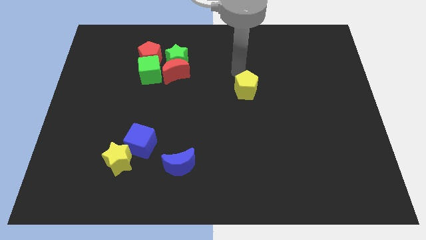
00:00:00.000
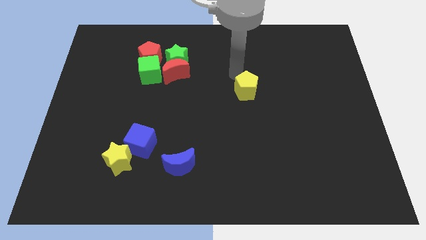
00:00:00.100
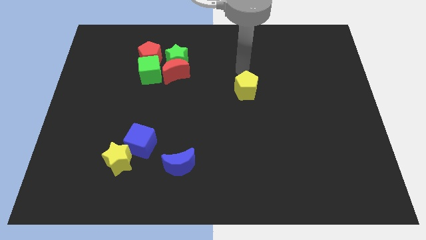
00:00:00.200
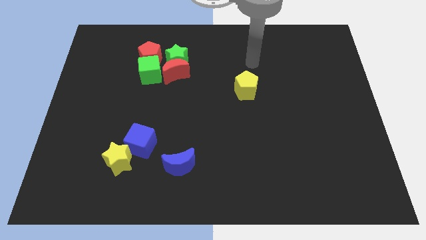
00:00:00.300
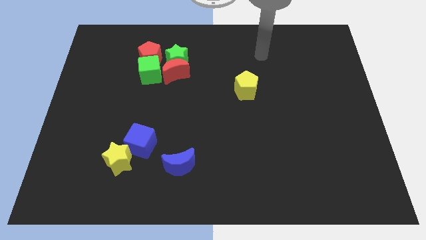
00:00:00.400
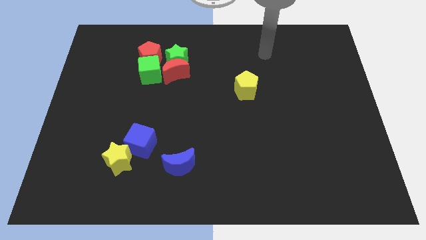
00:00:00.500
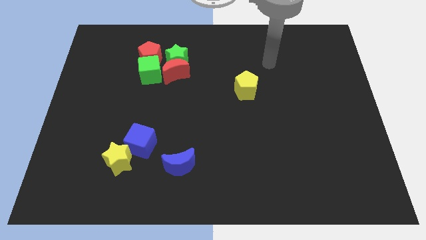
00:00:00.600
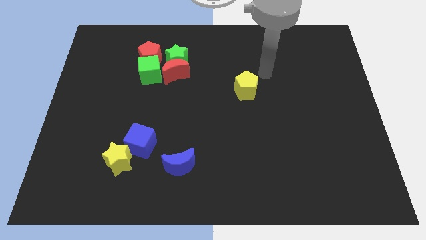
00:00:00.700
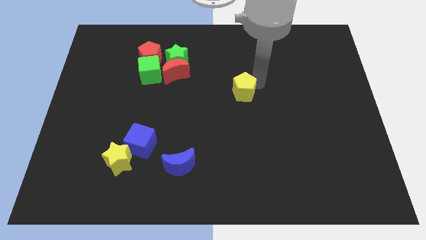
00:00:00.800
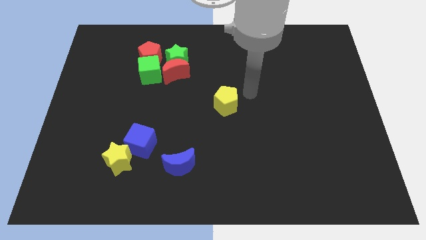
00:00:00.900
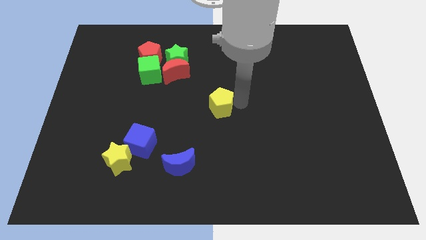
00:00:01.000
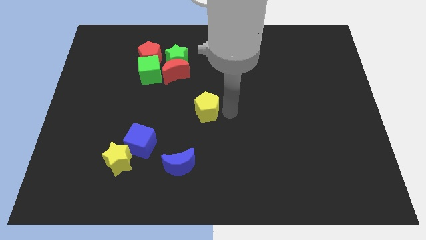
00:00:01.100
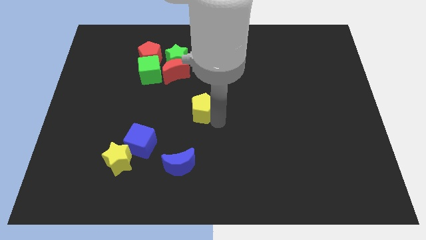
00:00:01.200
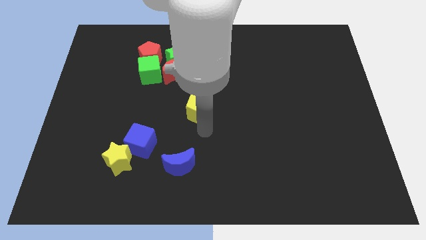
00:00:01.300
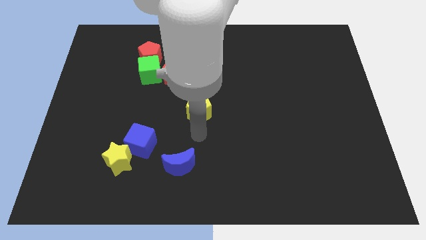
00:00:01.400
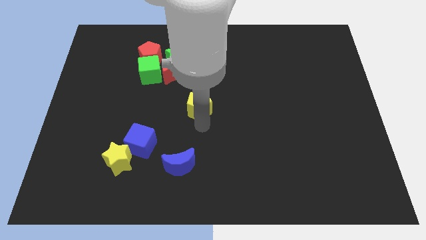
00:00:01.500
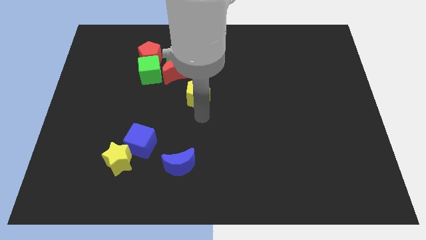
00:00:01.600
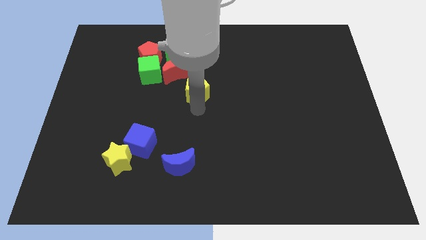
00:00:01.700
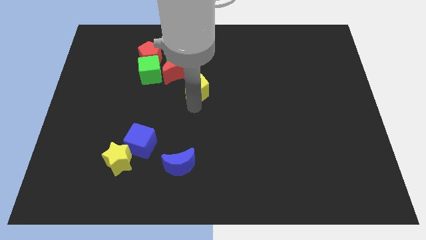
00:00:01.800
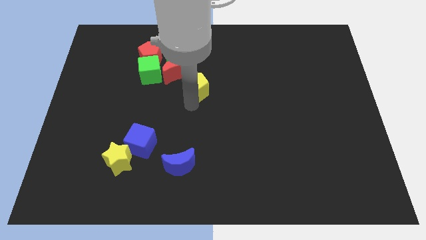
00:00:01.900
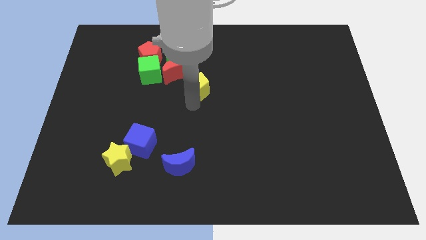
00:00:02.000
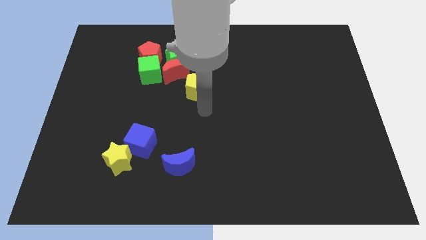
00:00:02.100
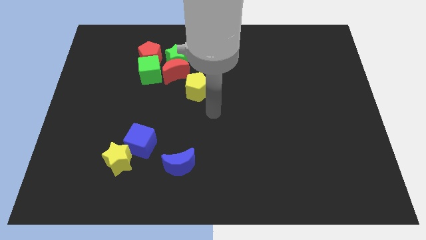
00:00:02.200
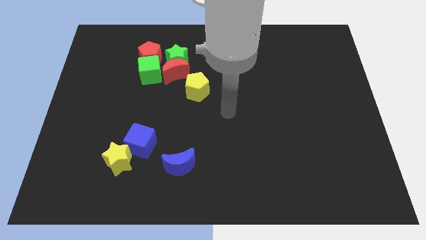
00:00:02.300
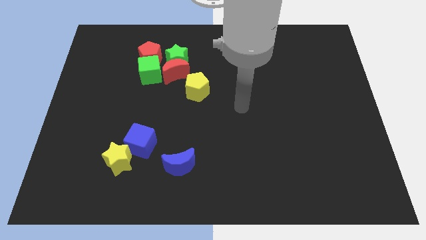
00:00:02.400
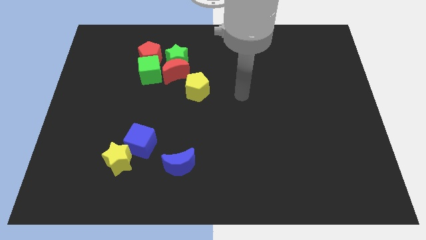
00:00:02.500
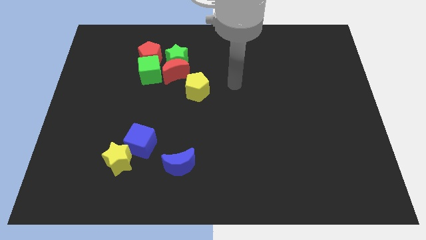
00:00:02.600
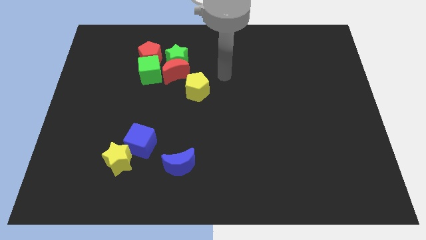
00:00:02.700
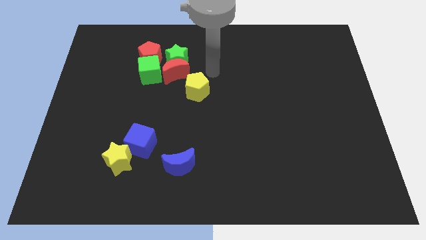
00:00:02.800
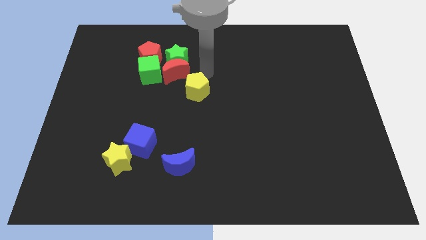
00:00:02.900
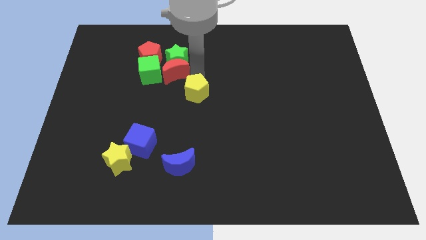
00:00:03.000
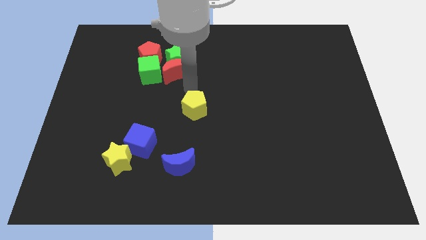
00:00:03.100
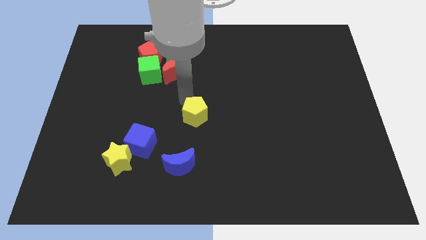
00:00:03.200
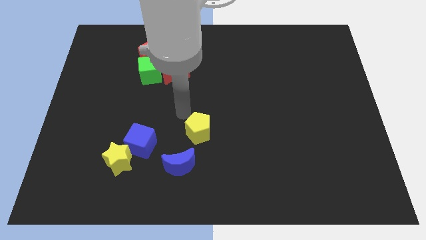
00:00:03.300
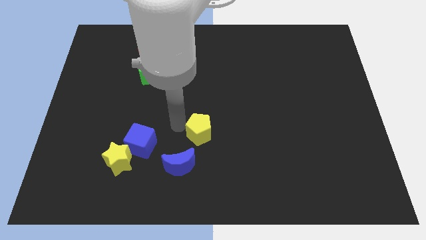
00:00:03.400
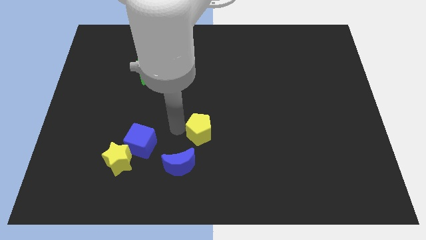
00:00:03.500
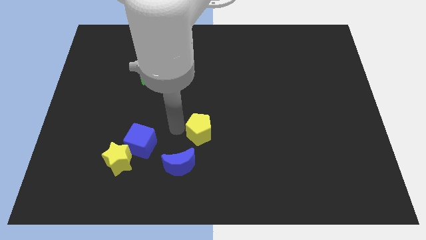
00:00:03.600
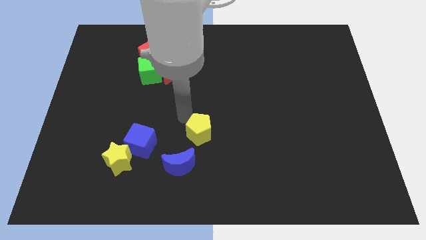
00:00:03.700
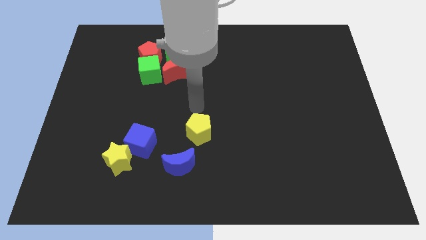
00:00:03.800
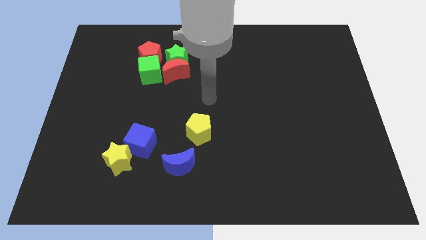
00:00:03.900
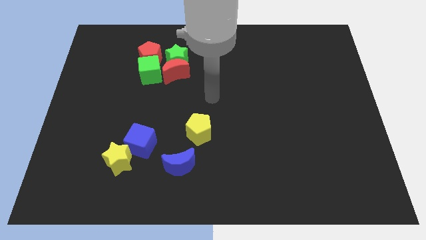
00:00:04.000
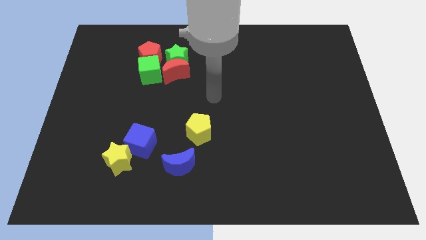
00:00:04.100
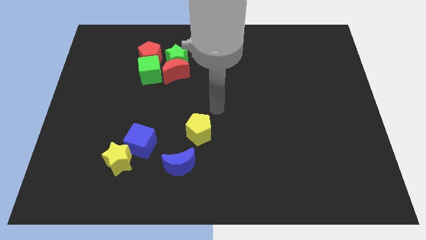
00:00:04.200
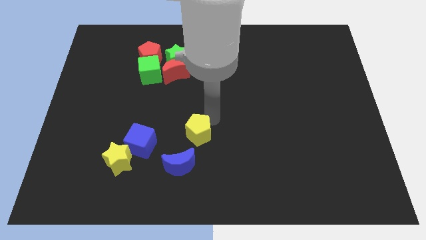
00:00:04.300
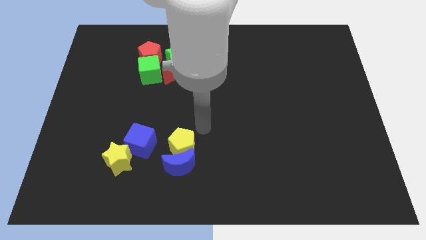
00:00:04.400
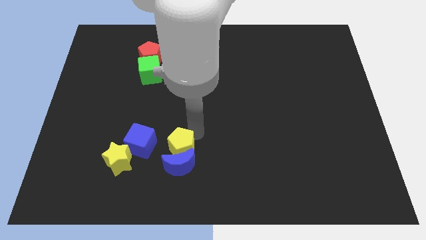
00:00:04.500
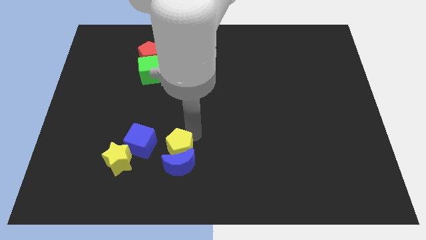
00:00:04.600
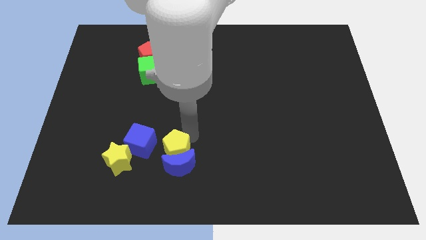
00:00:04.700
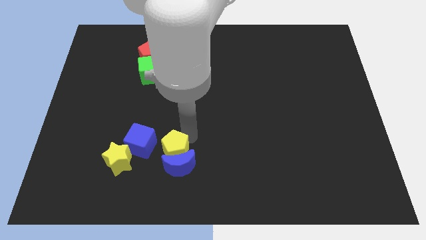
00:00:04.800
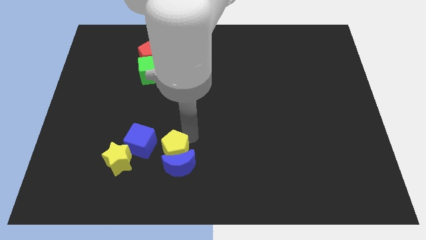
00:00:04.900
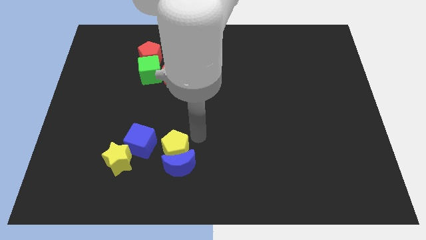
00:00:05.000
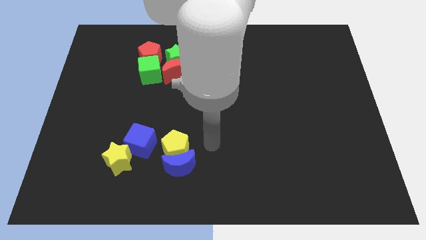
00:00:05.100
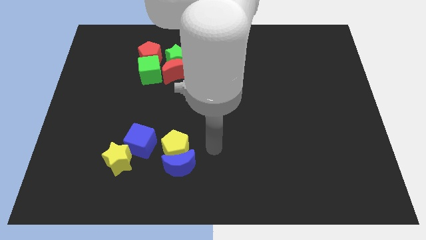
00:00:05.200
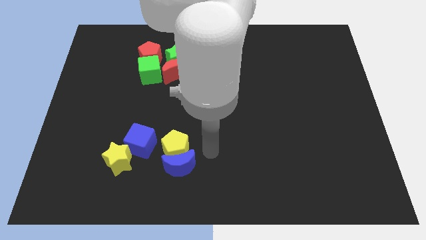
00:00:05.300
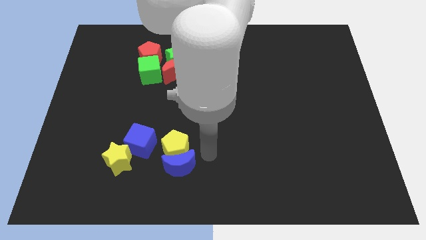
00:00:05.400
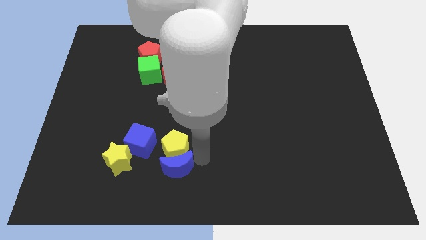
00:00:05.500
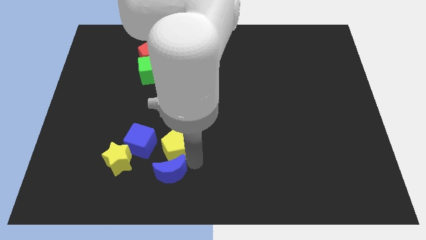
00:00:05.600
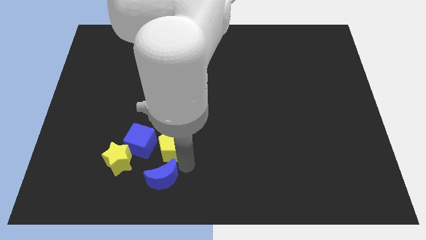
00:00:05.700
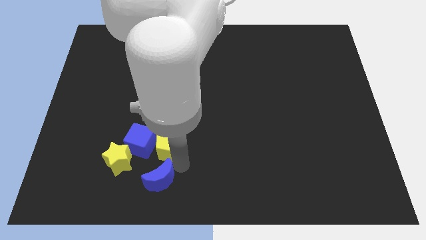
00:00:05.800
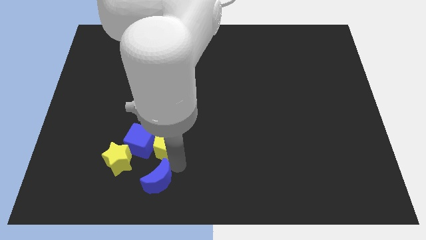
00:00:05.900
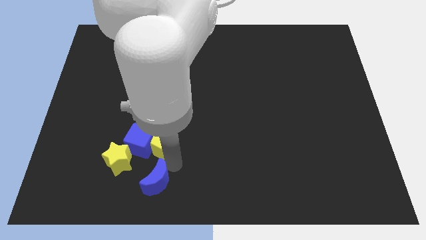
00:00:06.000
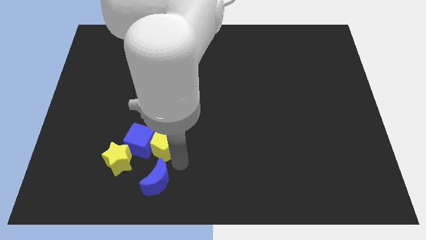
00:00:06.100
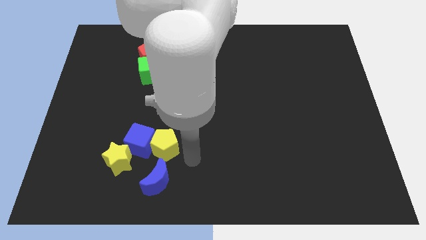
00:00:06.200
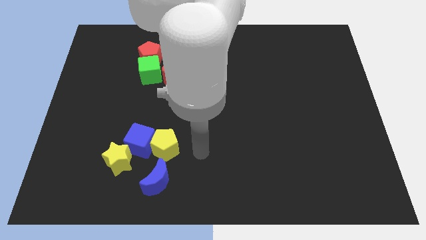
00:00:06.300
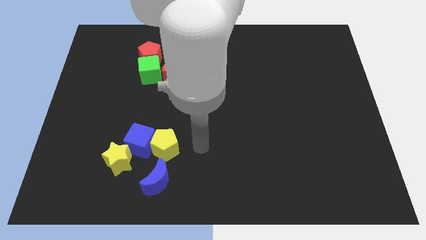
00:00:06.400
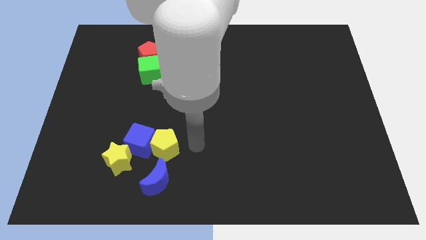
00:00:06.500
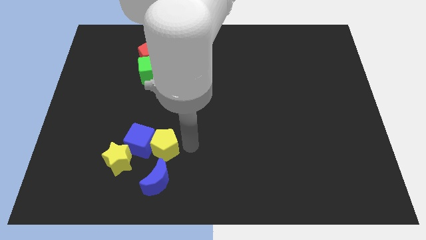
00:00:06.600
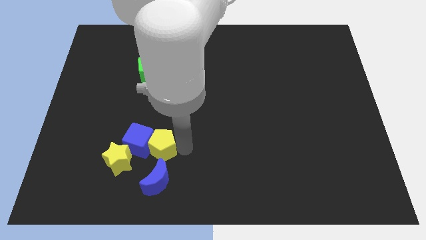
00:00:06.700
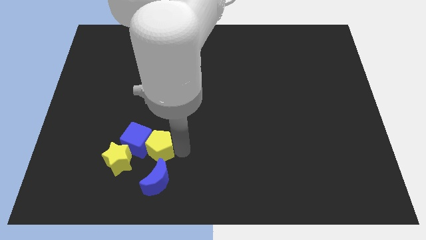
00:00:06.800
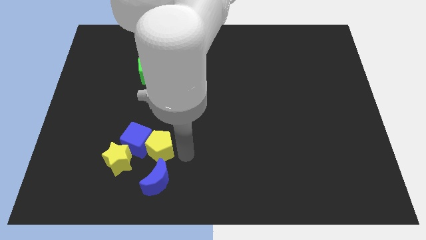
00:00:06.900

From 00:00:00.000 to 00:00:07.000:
push the yellow pentagon into the right side of the blue cube

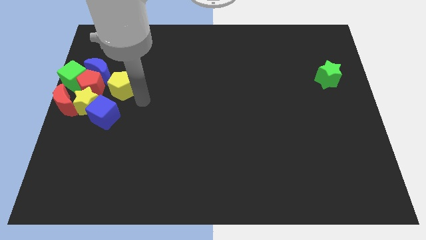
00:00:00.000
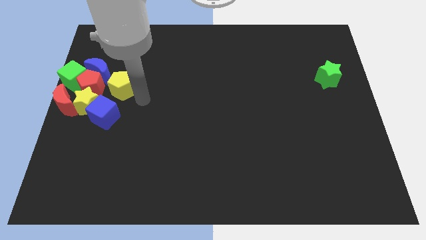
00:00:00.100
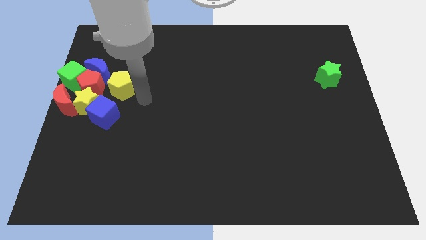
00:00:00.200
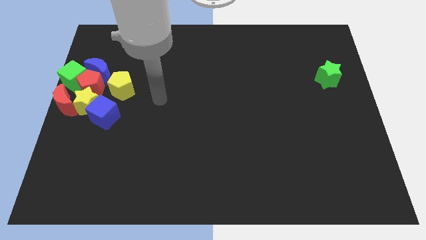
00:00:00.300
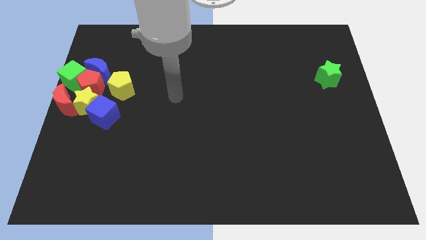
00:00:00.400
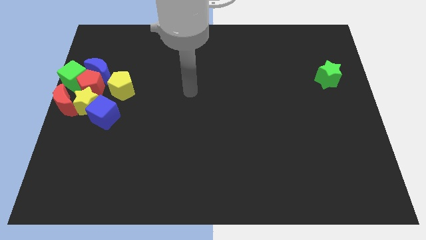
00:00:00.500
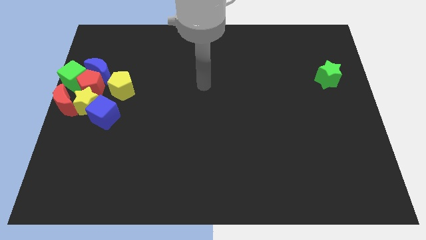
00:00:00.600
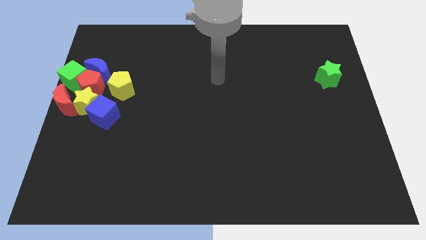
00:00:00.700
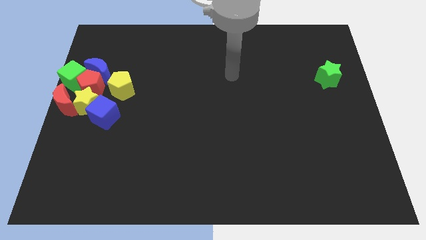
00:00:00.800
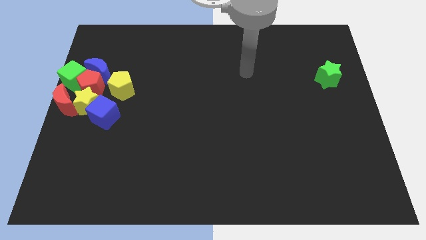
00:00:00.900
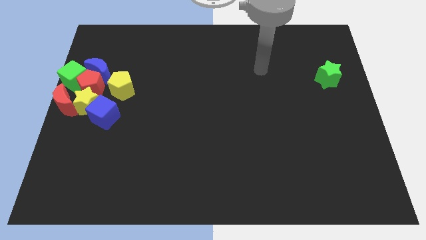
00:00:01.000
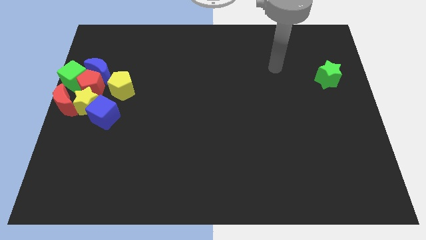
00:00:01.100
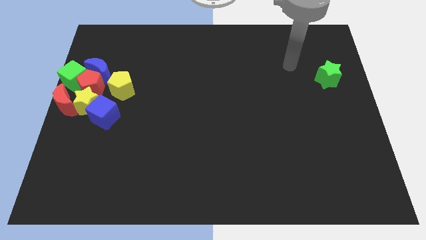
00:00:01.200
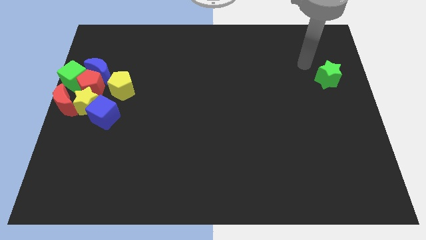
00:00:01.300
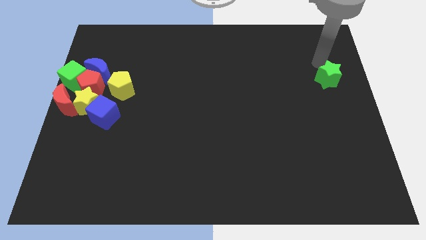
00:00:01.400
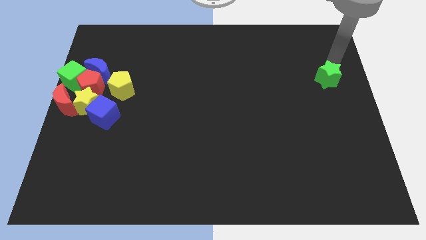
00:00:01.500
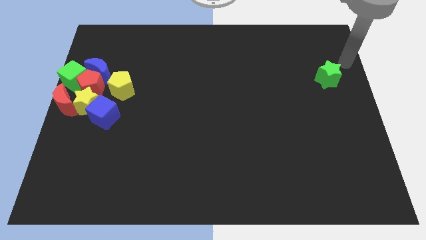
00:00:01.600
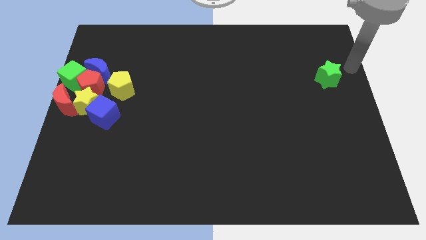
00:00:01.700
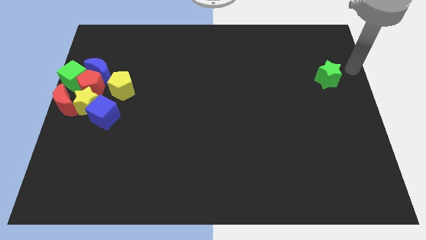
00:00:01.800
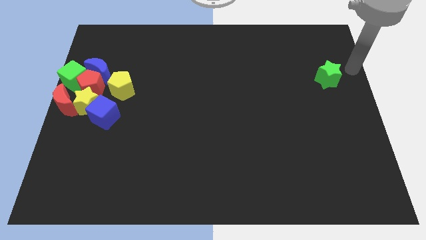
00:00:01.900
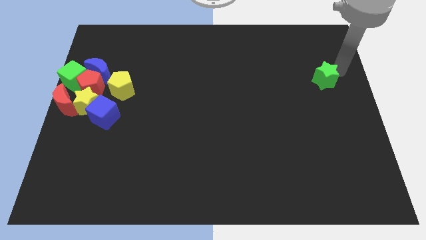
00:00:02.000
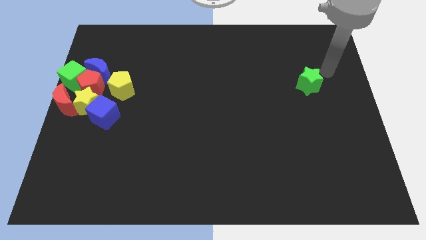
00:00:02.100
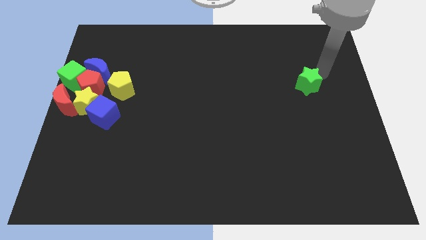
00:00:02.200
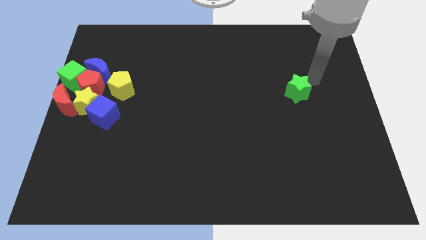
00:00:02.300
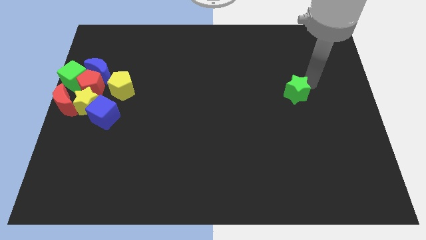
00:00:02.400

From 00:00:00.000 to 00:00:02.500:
push the green star towards the center of the board
